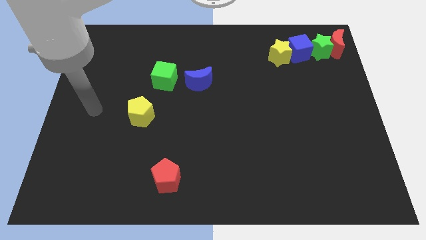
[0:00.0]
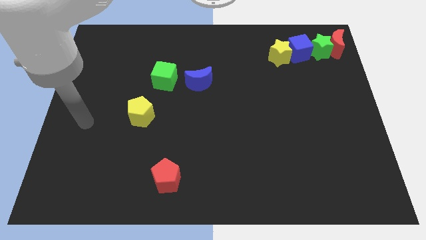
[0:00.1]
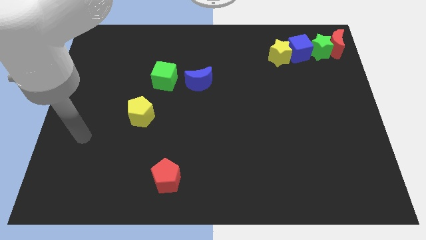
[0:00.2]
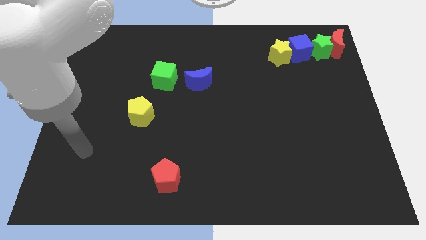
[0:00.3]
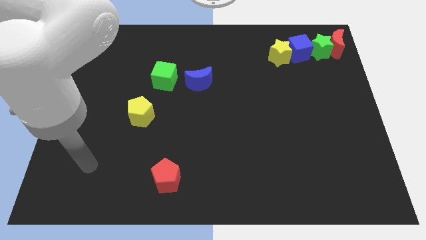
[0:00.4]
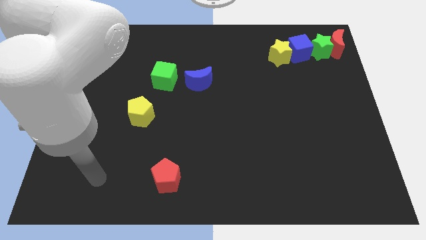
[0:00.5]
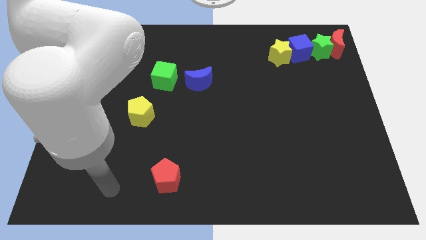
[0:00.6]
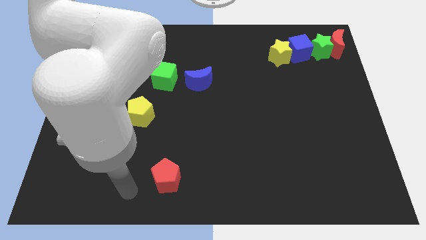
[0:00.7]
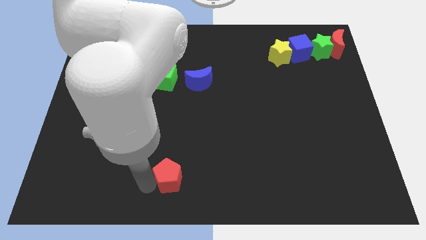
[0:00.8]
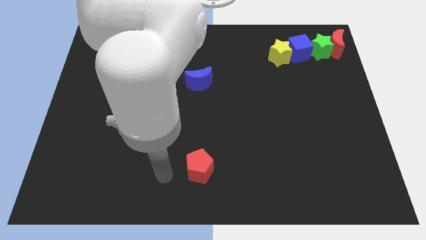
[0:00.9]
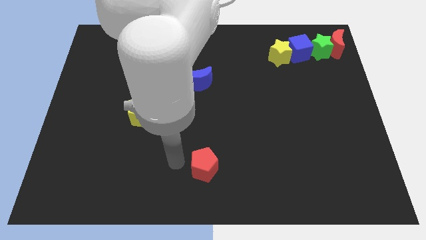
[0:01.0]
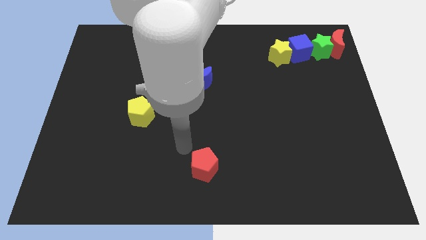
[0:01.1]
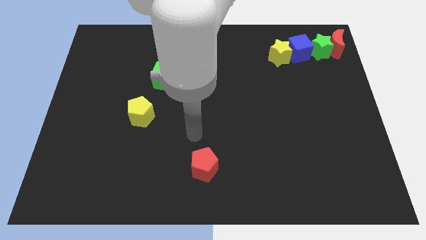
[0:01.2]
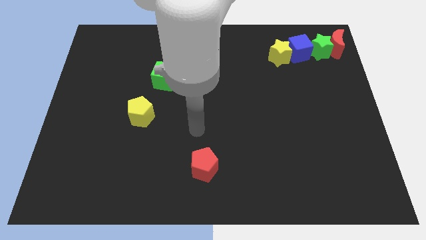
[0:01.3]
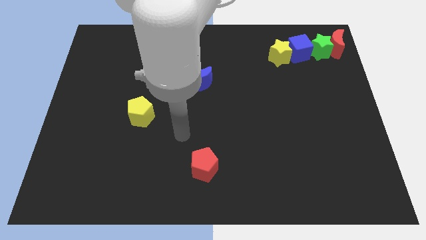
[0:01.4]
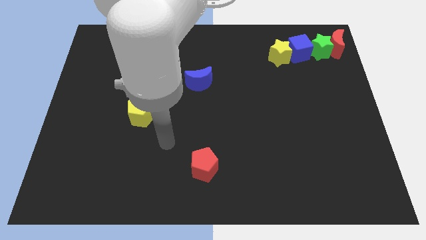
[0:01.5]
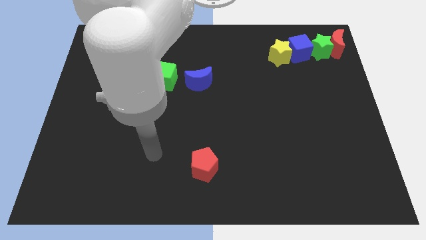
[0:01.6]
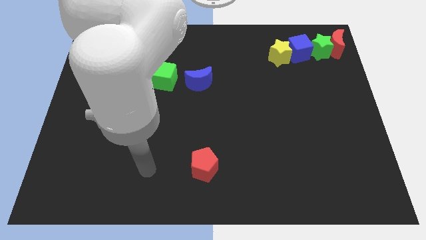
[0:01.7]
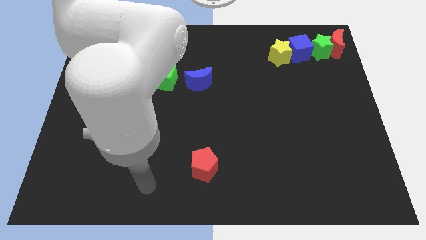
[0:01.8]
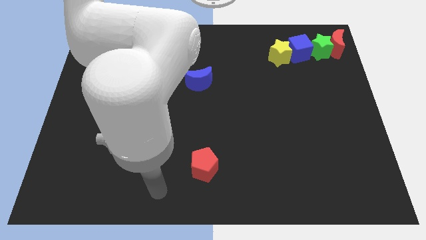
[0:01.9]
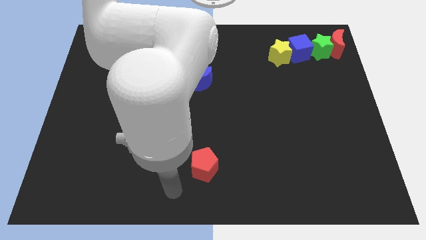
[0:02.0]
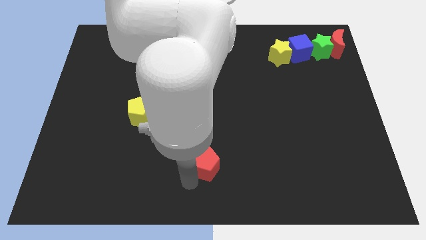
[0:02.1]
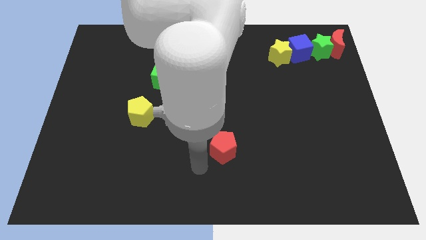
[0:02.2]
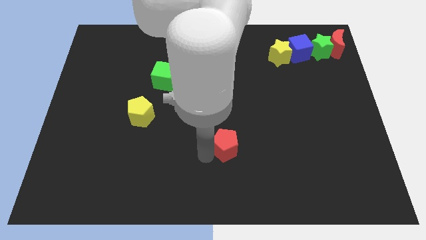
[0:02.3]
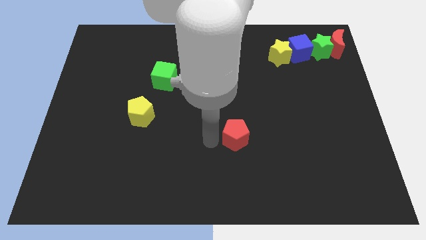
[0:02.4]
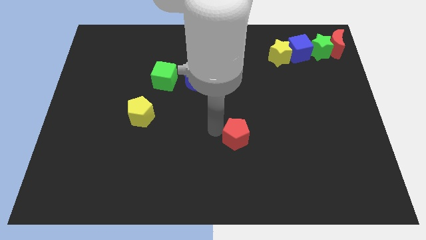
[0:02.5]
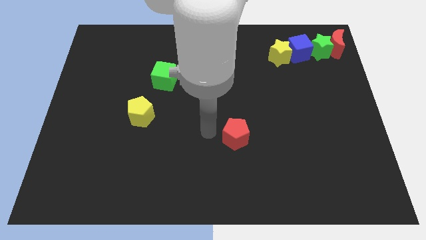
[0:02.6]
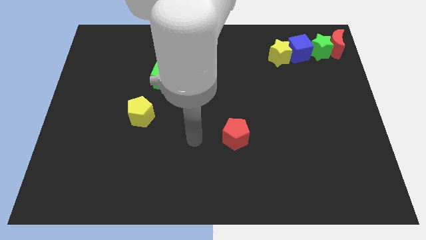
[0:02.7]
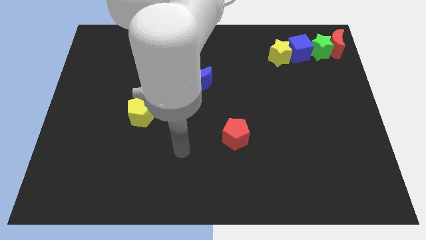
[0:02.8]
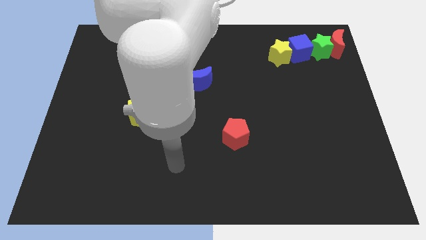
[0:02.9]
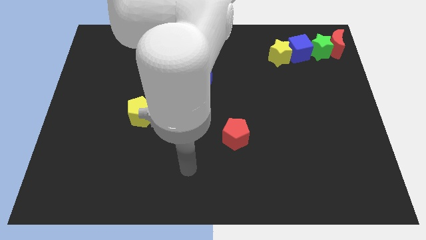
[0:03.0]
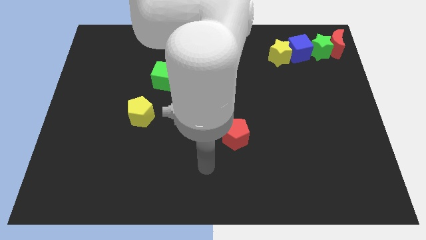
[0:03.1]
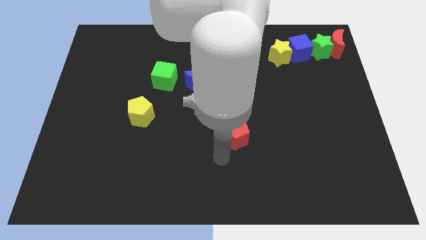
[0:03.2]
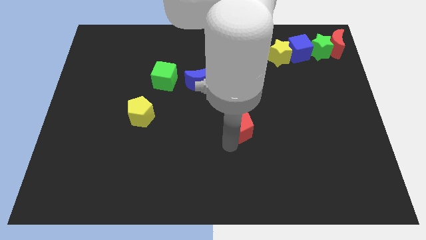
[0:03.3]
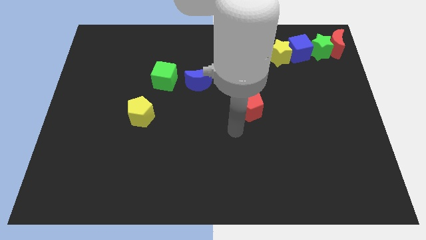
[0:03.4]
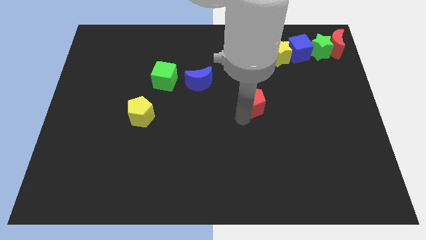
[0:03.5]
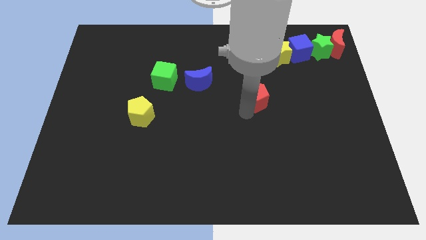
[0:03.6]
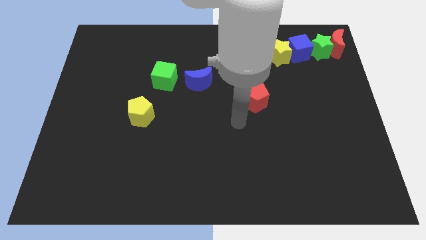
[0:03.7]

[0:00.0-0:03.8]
move the red pentagon towards the top of the board

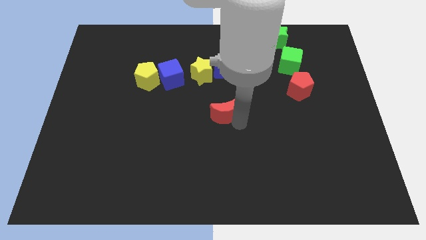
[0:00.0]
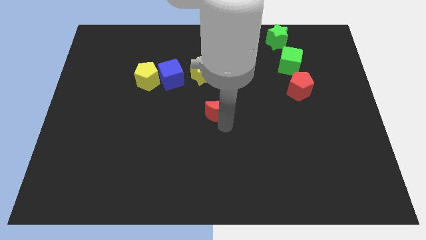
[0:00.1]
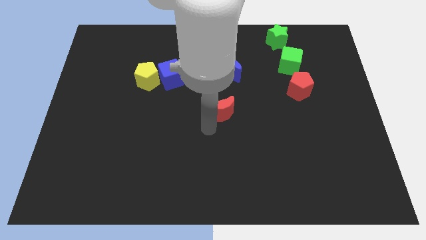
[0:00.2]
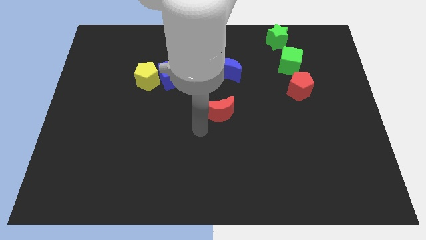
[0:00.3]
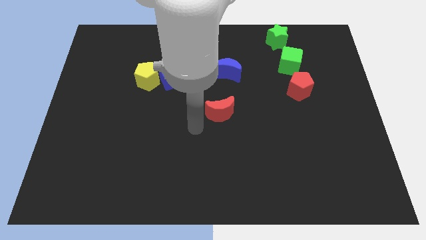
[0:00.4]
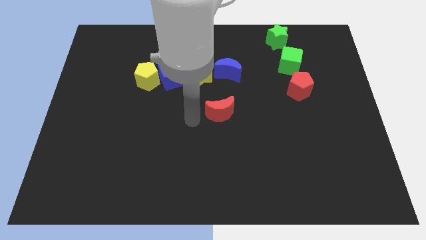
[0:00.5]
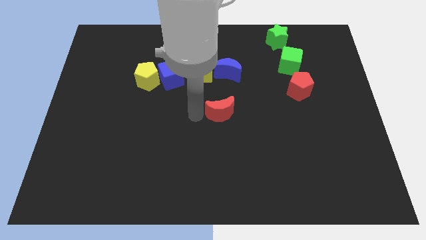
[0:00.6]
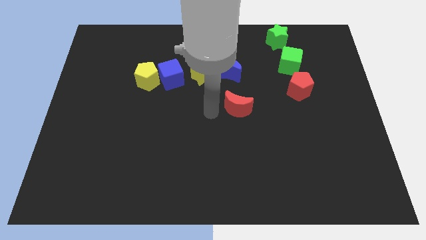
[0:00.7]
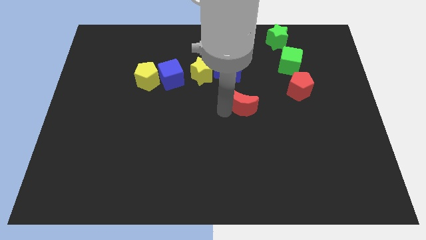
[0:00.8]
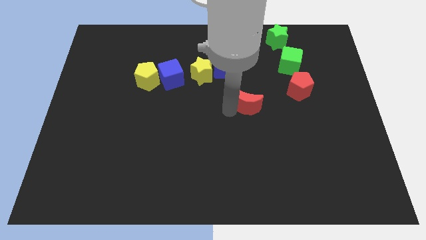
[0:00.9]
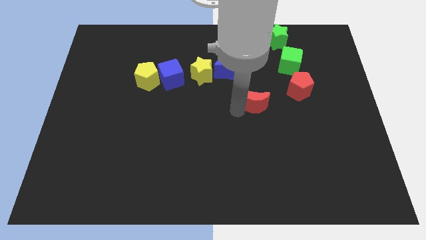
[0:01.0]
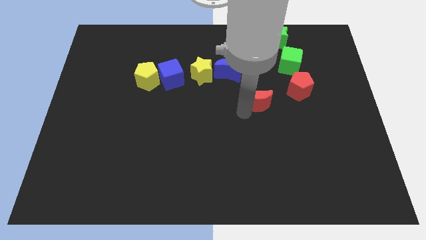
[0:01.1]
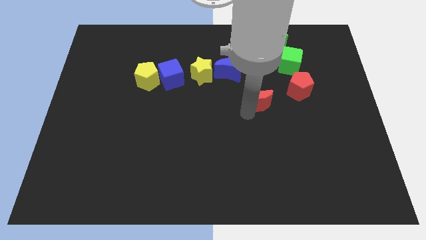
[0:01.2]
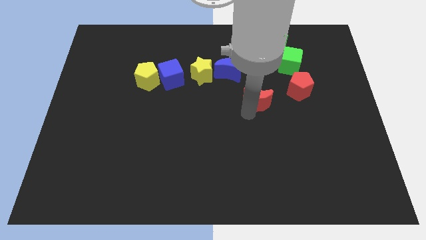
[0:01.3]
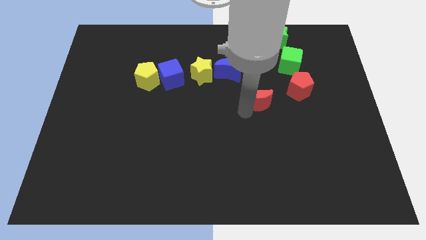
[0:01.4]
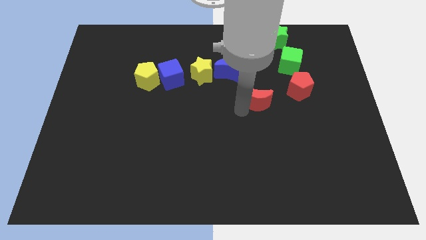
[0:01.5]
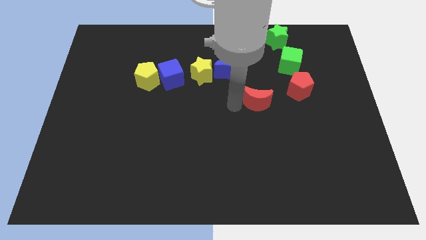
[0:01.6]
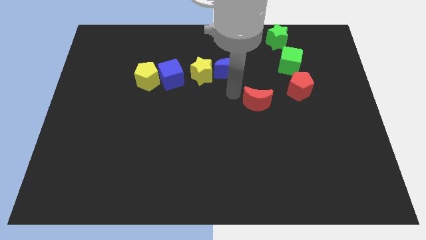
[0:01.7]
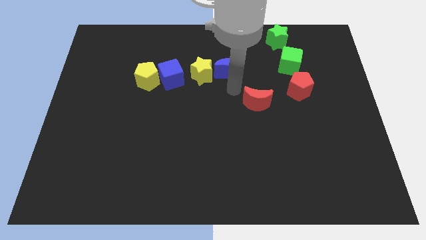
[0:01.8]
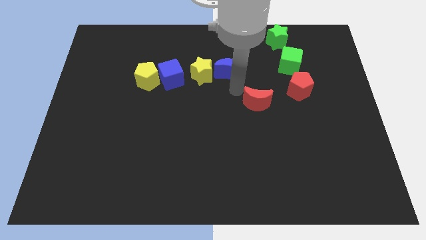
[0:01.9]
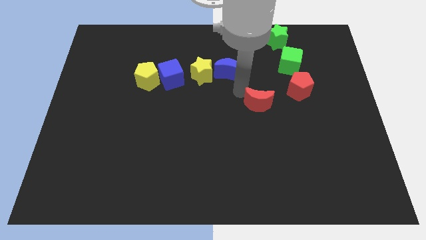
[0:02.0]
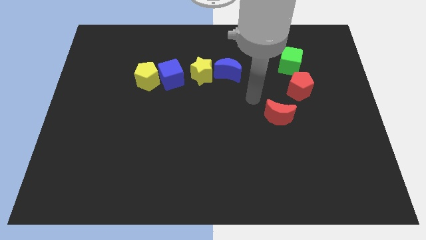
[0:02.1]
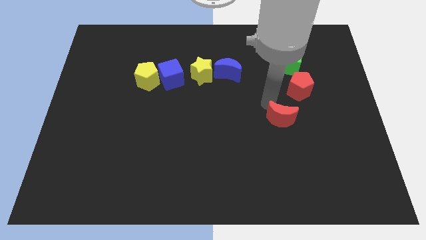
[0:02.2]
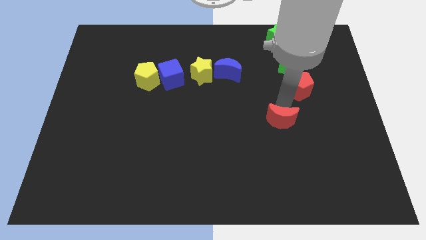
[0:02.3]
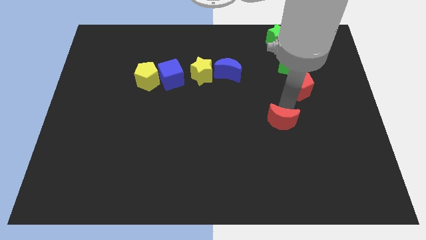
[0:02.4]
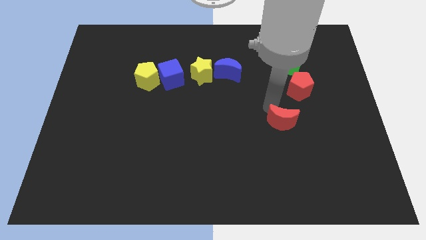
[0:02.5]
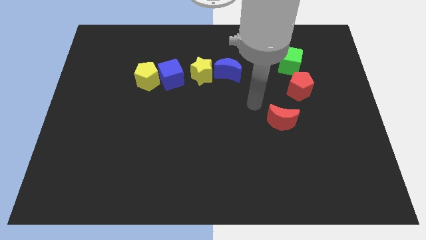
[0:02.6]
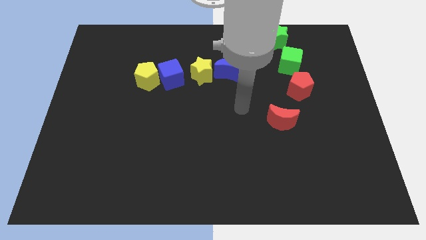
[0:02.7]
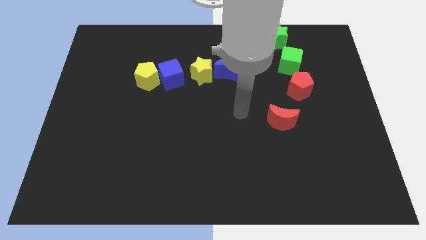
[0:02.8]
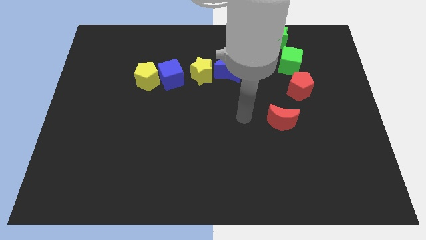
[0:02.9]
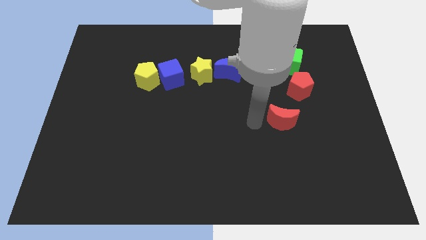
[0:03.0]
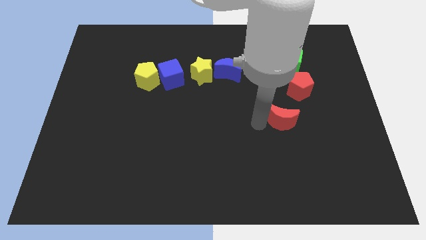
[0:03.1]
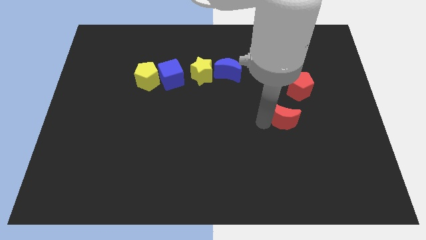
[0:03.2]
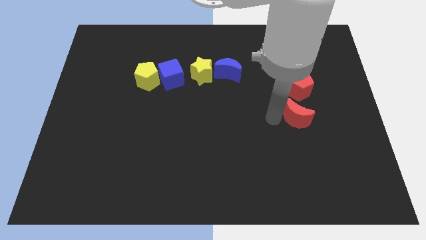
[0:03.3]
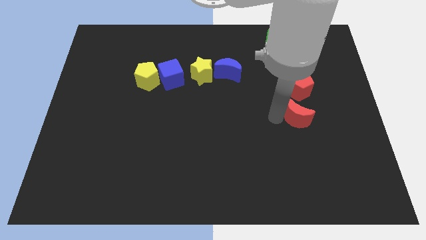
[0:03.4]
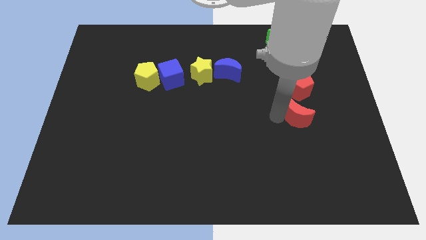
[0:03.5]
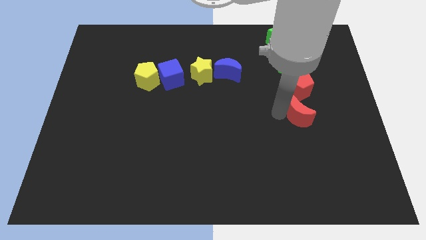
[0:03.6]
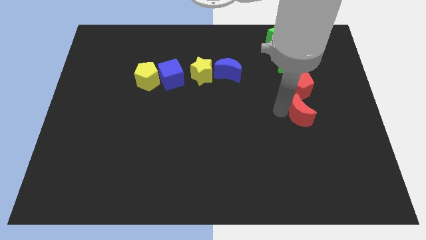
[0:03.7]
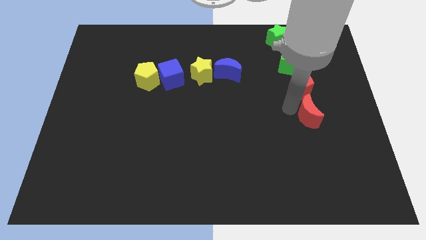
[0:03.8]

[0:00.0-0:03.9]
place the red crescent below the red pentagon

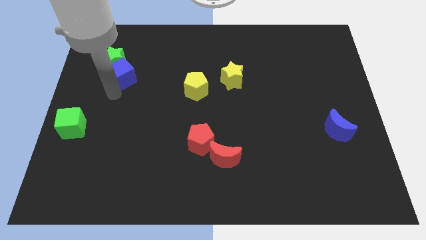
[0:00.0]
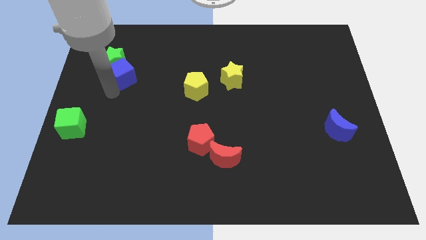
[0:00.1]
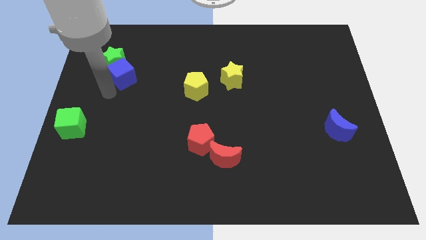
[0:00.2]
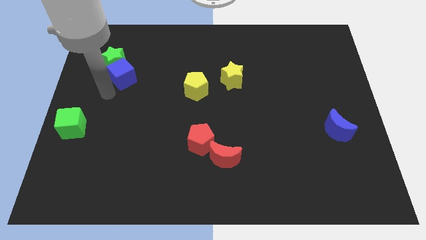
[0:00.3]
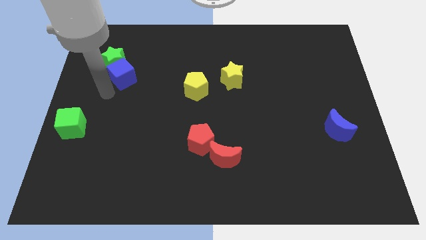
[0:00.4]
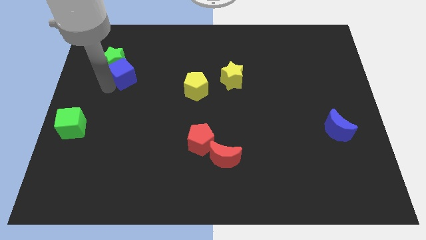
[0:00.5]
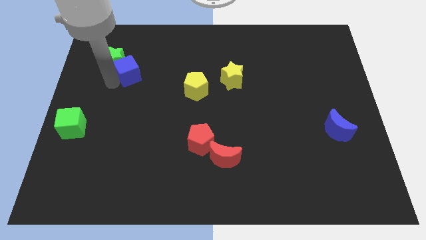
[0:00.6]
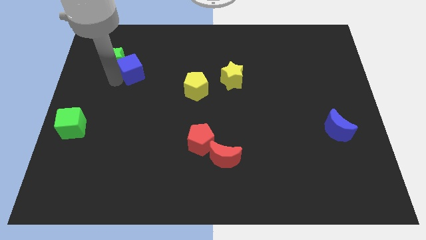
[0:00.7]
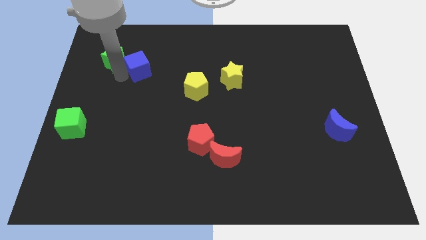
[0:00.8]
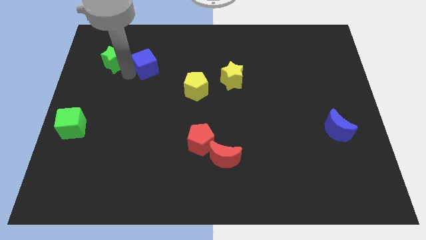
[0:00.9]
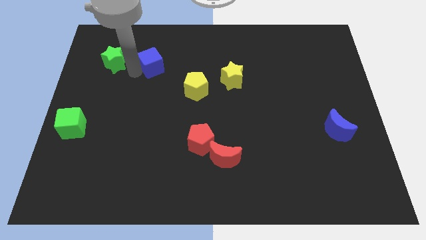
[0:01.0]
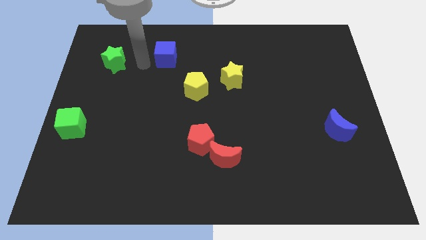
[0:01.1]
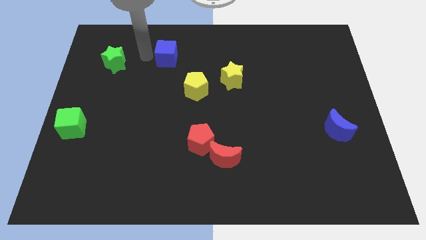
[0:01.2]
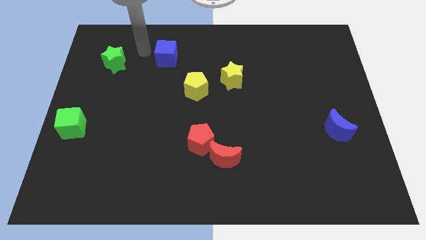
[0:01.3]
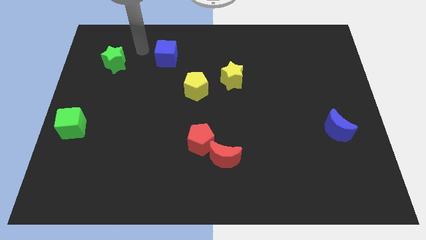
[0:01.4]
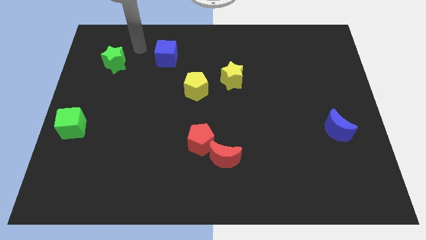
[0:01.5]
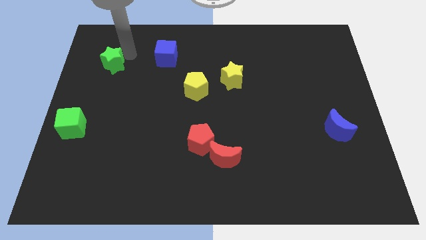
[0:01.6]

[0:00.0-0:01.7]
place blue cube diagonal to the yellow pentagon
